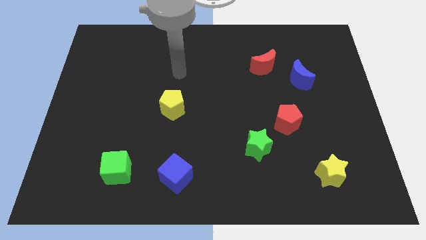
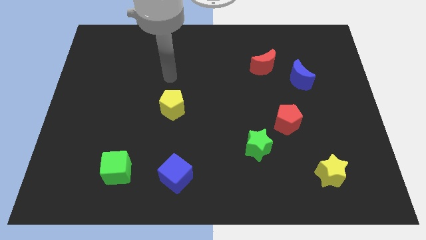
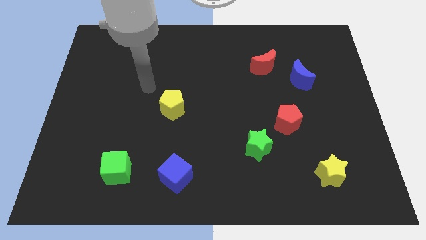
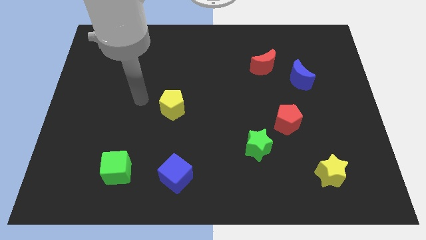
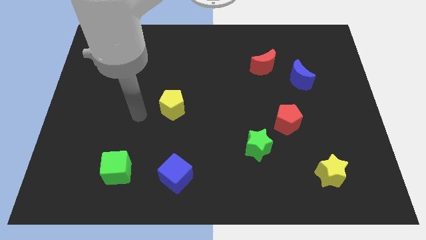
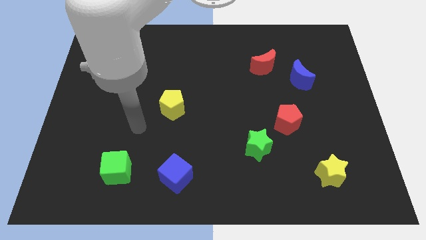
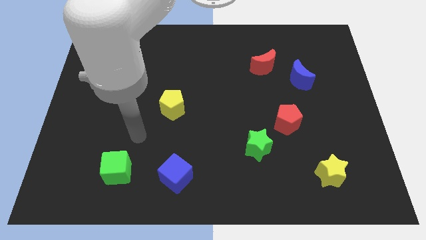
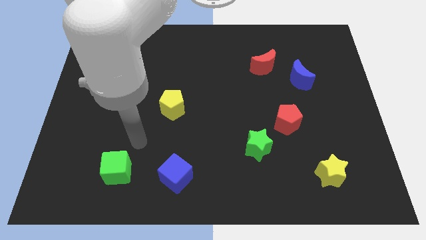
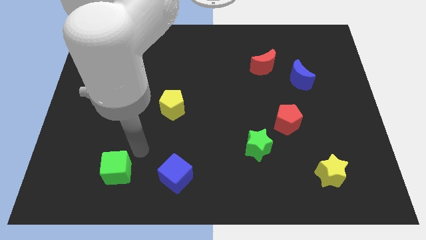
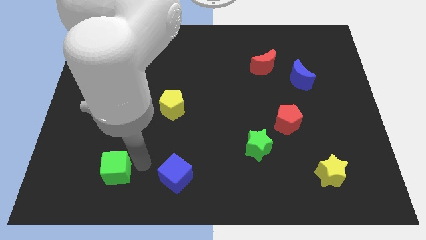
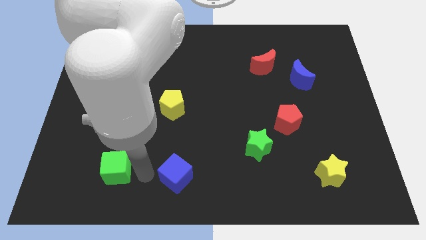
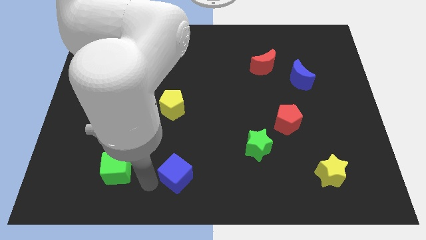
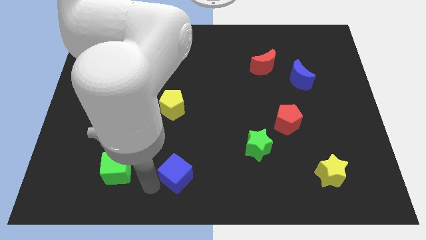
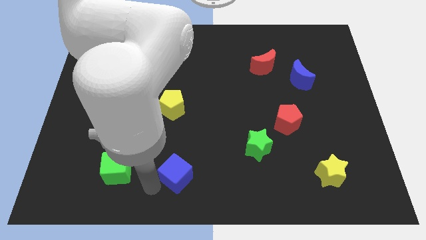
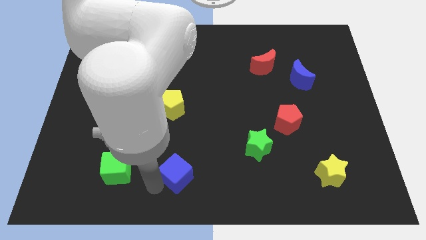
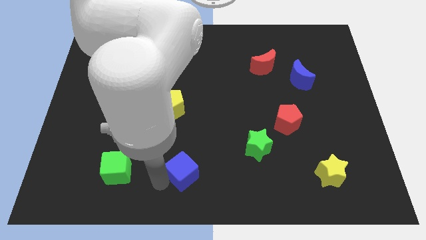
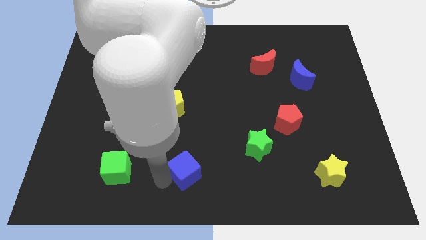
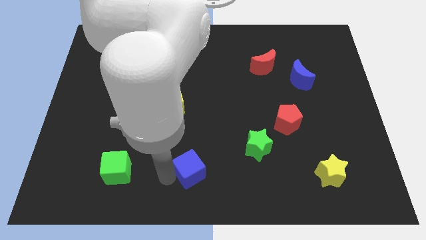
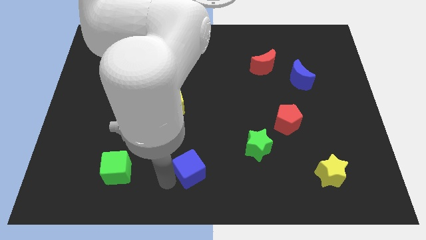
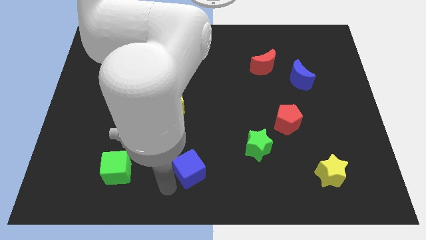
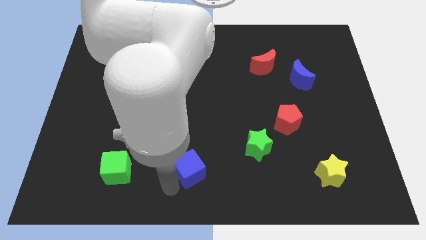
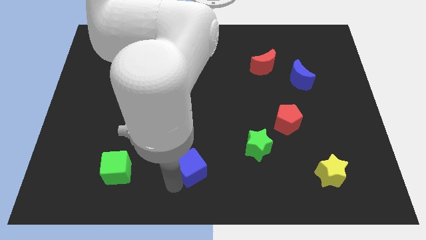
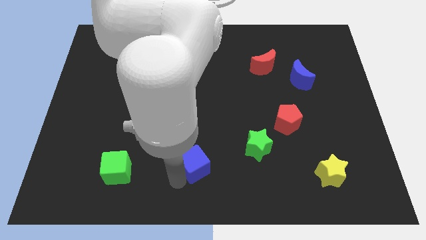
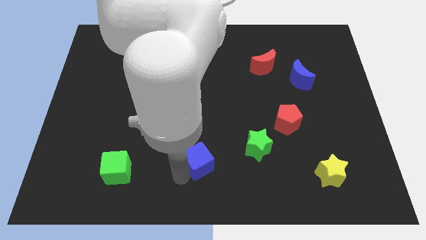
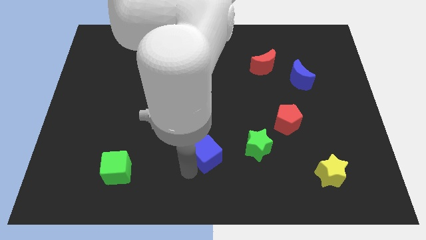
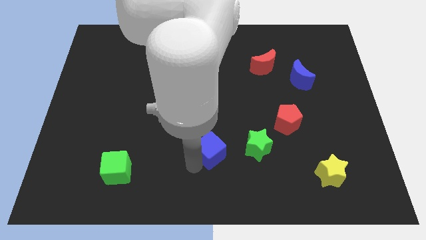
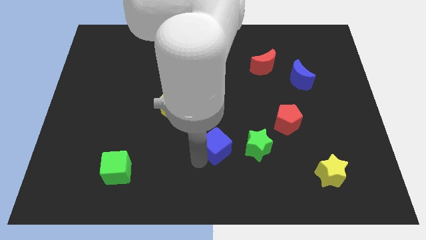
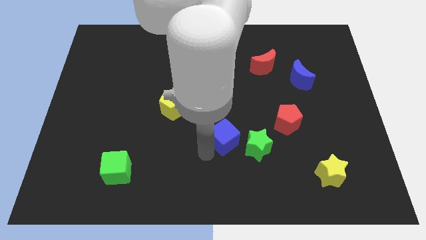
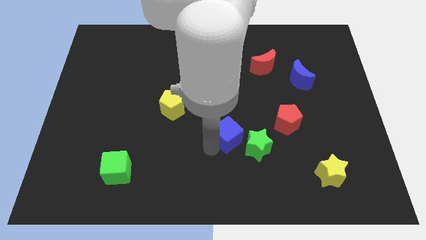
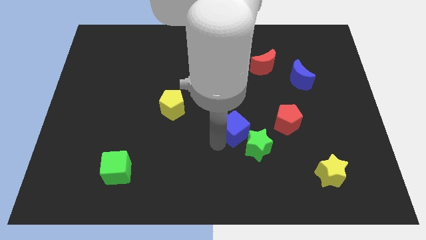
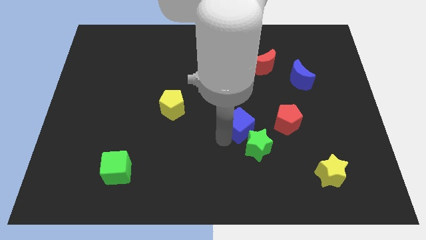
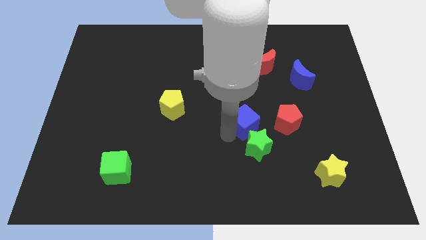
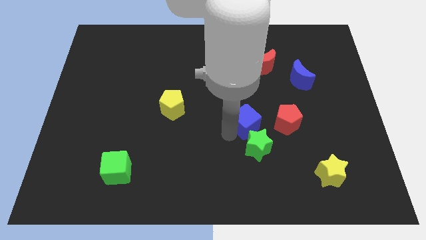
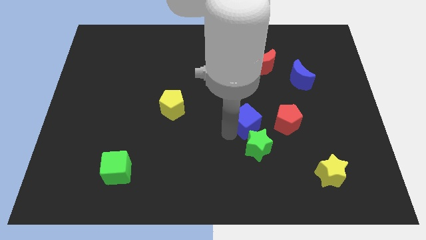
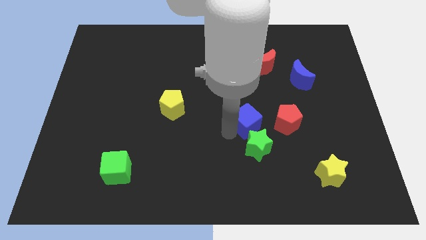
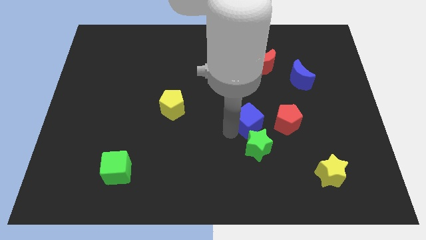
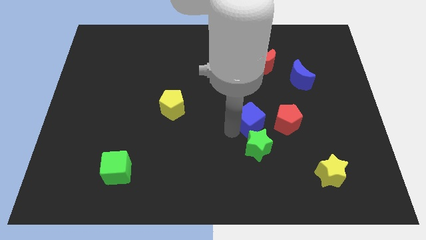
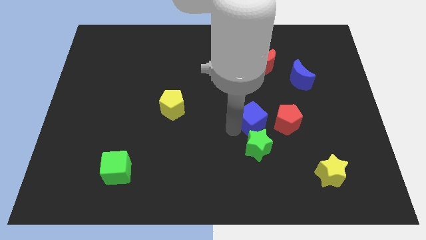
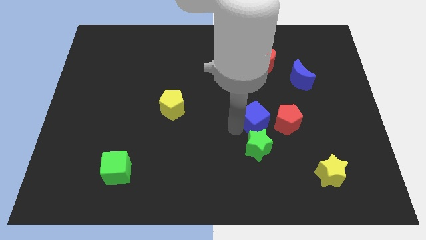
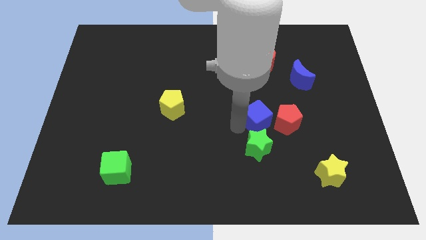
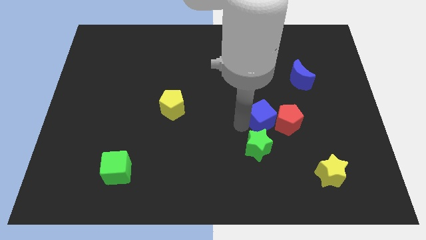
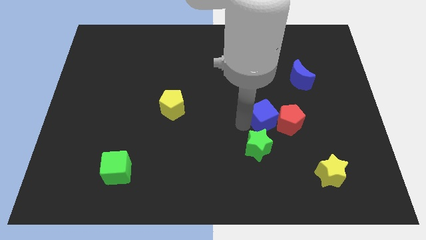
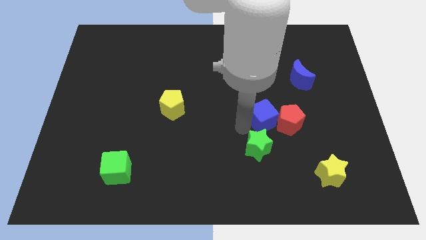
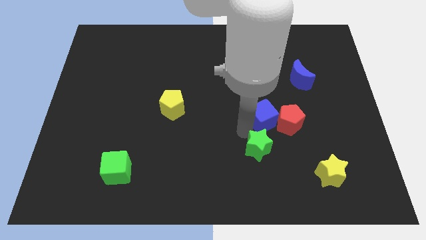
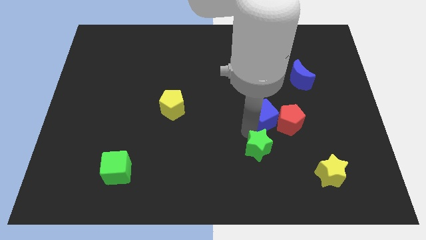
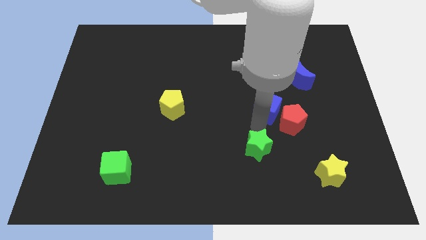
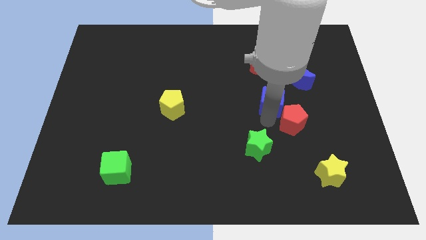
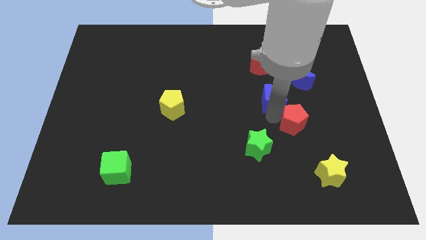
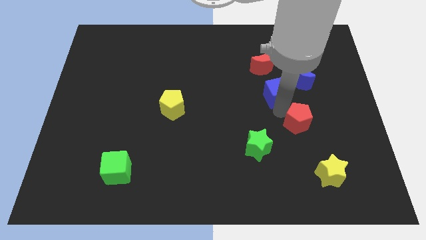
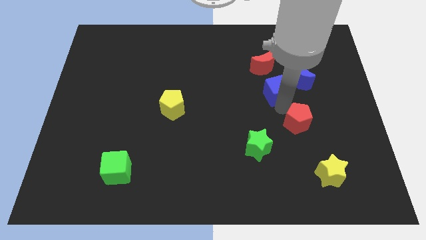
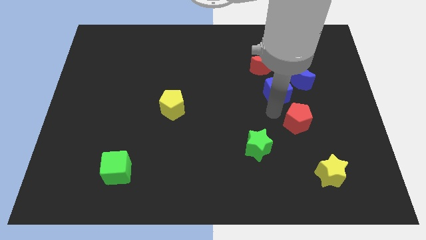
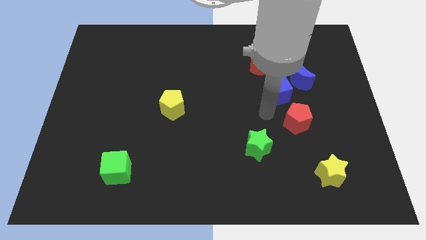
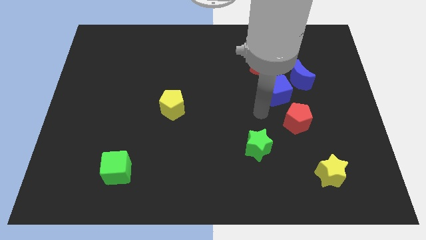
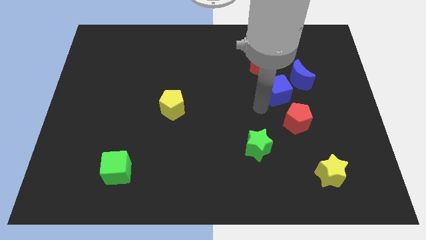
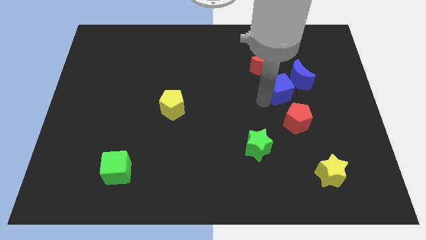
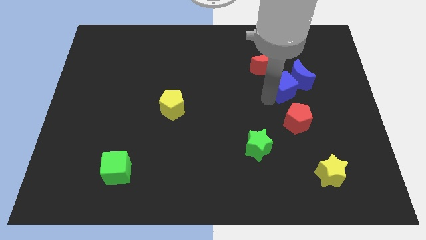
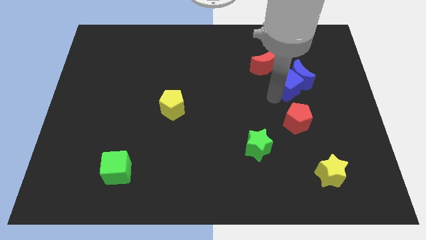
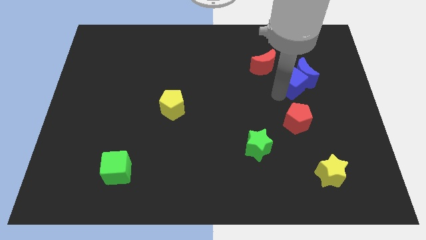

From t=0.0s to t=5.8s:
move the blue cube to the blue moon

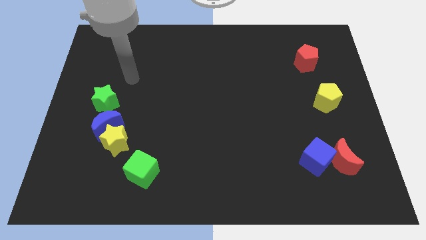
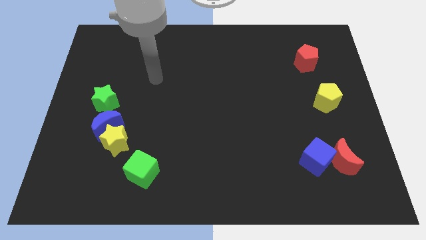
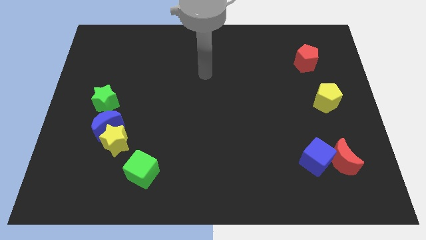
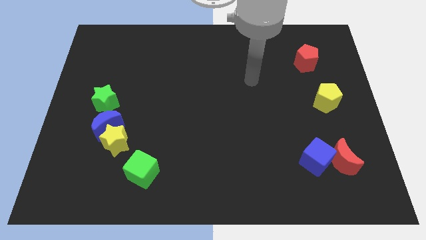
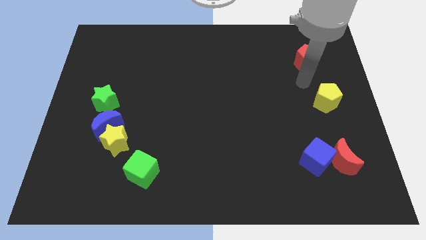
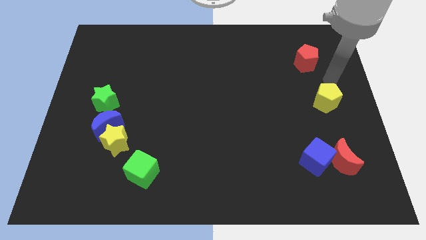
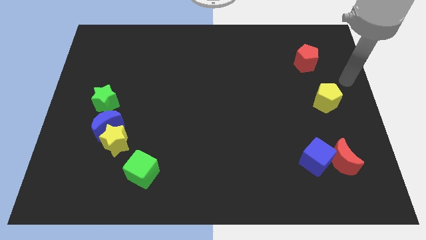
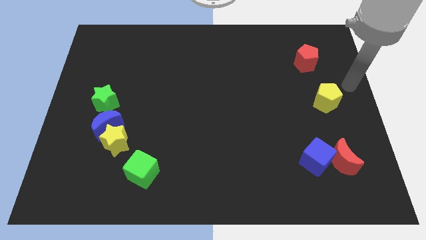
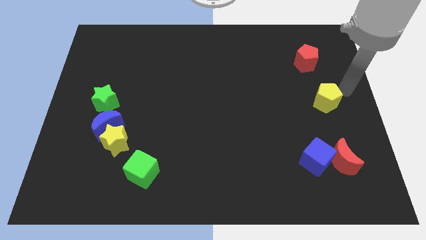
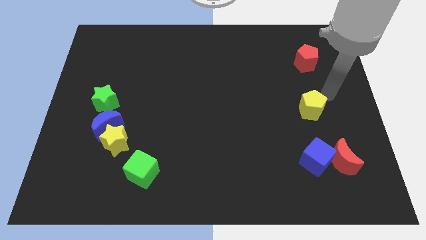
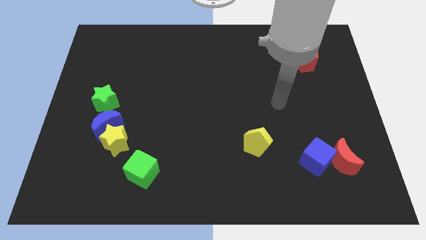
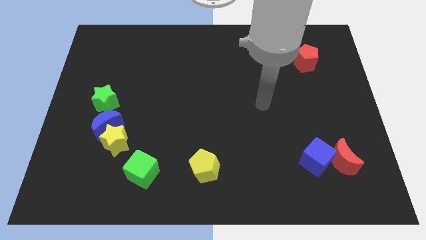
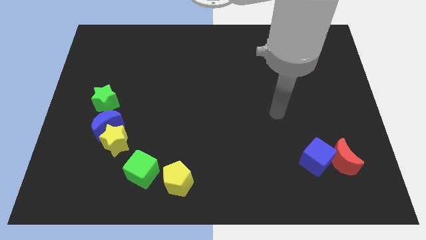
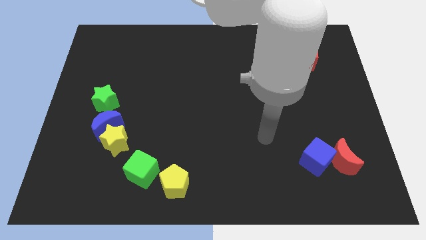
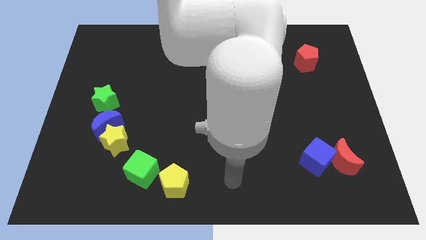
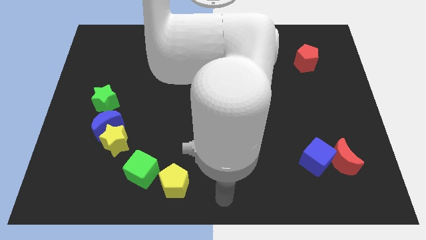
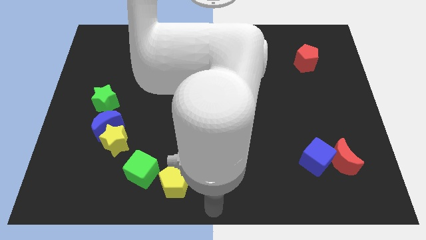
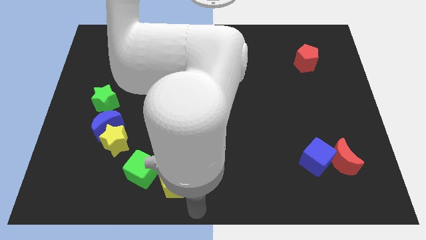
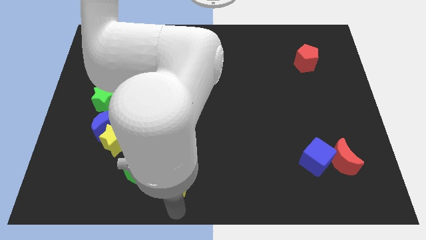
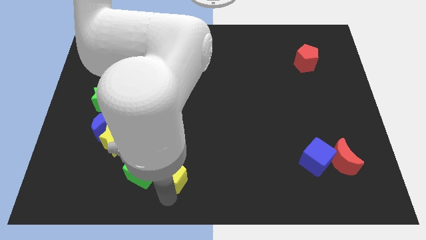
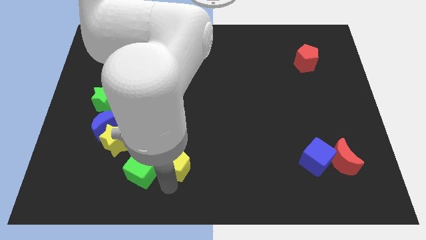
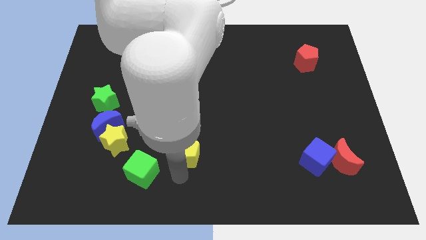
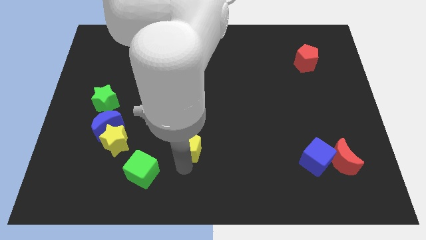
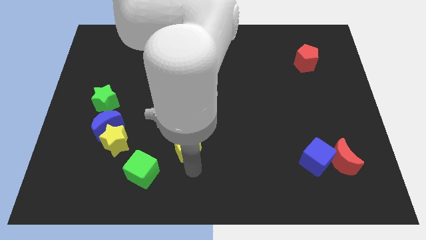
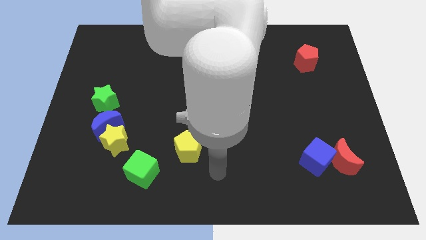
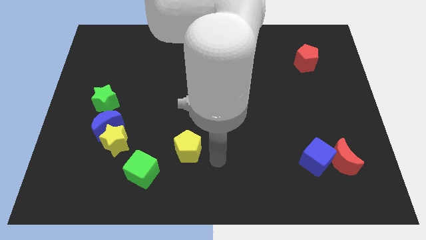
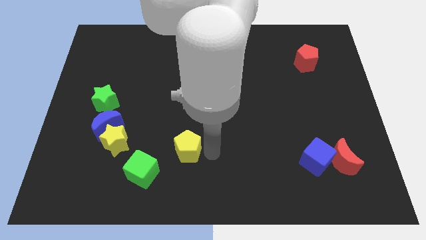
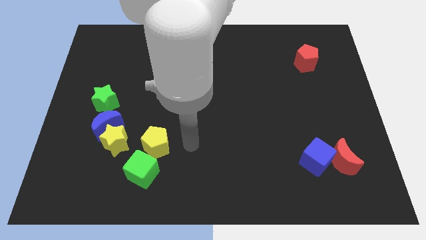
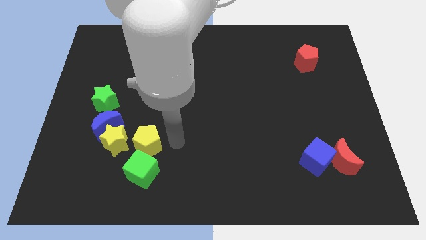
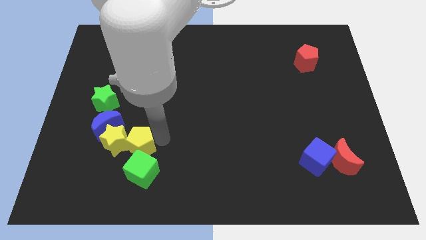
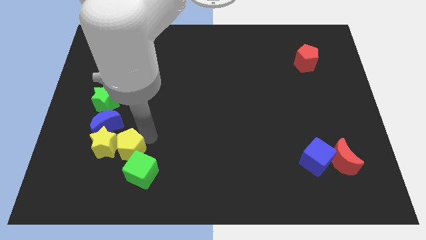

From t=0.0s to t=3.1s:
push the yellow pentagon next to the yellow star
